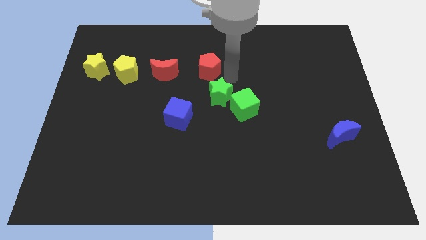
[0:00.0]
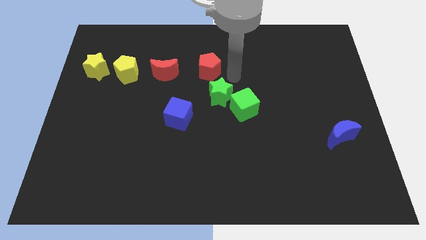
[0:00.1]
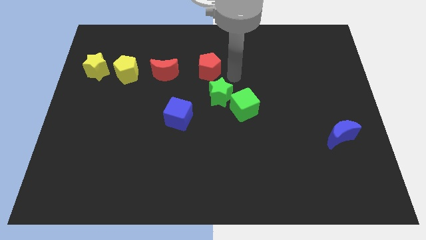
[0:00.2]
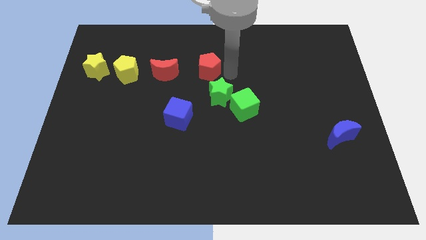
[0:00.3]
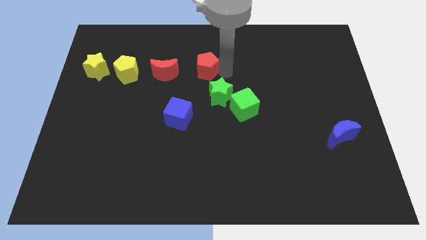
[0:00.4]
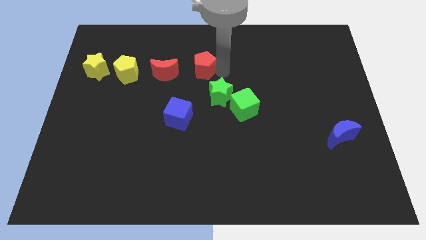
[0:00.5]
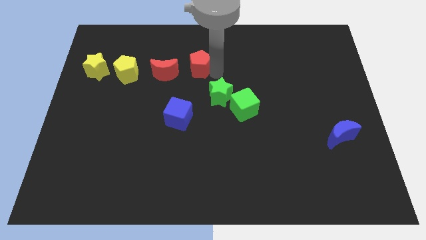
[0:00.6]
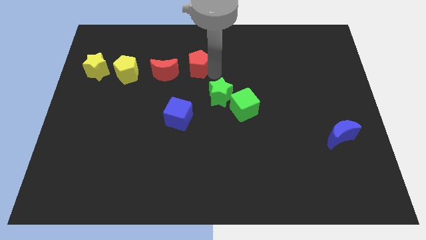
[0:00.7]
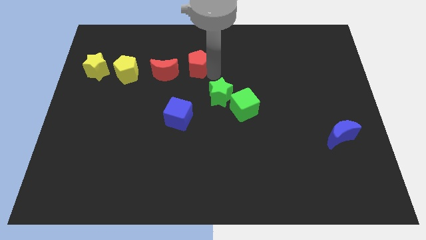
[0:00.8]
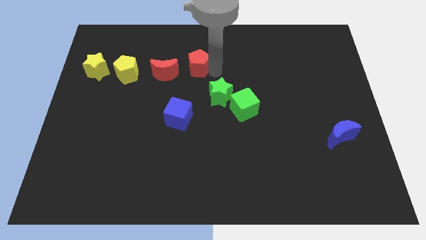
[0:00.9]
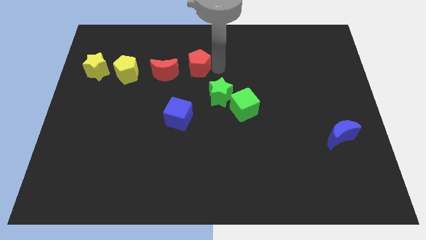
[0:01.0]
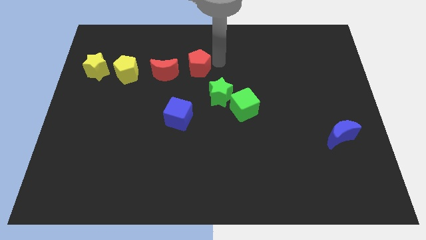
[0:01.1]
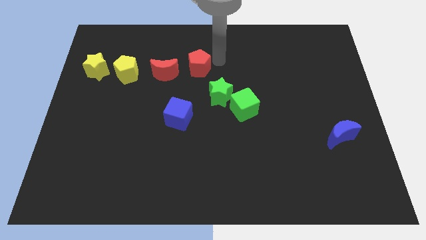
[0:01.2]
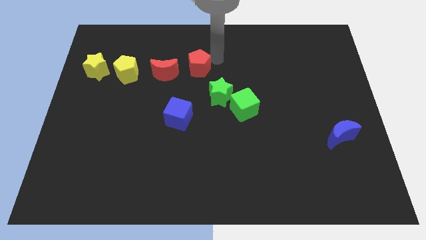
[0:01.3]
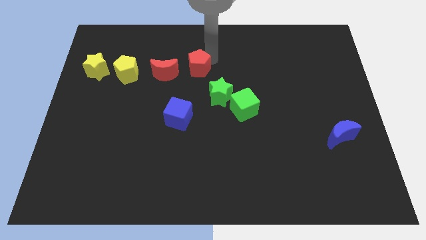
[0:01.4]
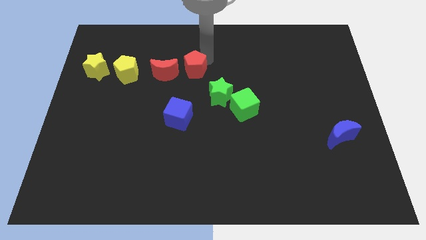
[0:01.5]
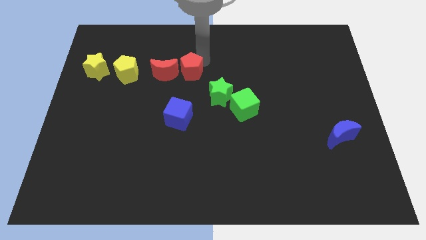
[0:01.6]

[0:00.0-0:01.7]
push the red pentagon to the right side of the red crescent

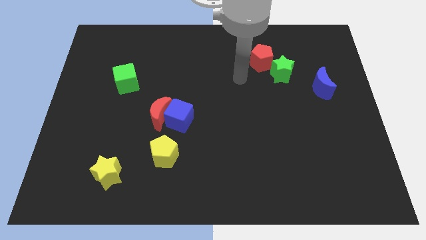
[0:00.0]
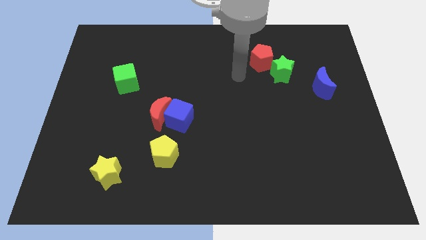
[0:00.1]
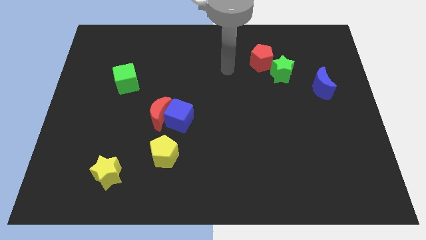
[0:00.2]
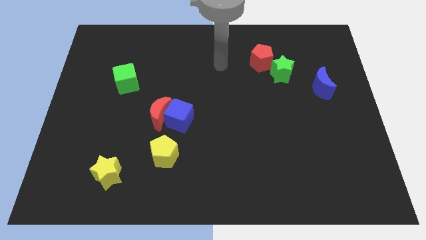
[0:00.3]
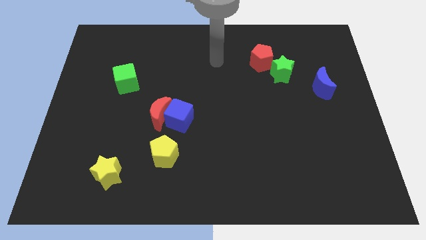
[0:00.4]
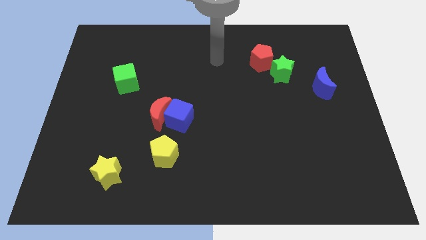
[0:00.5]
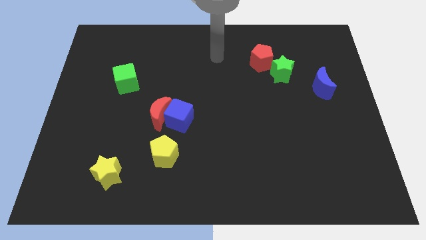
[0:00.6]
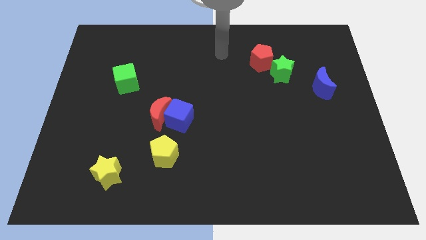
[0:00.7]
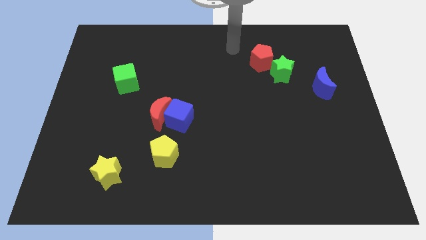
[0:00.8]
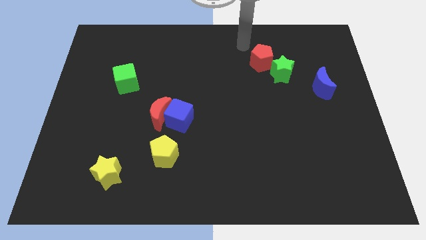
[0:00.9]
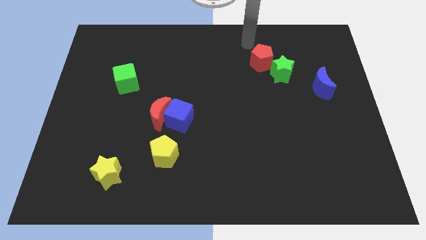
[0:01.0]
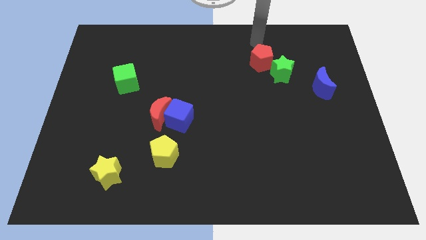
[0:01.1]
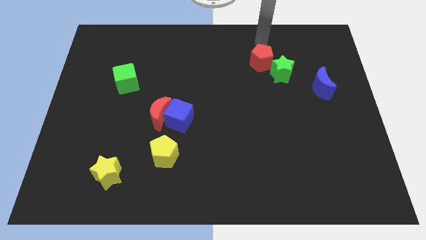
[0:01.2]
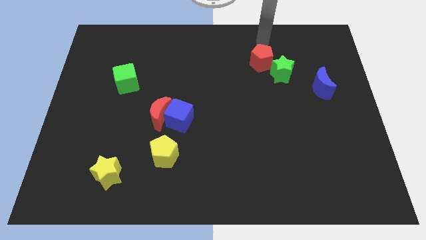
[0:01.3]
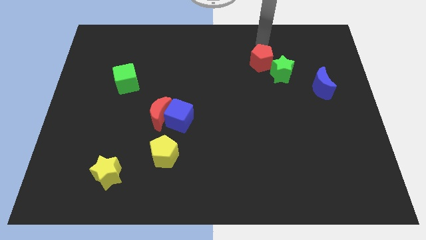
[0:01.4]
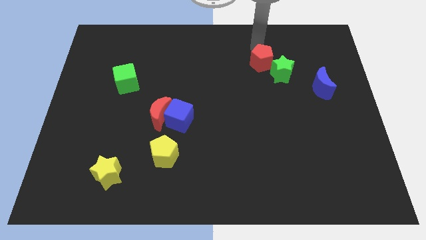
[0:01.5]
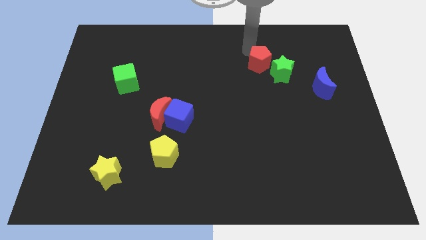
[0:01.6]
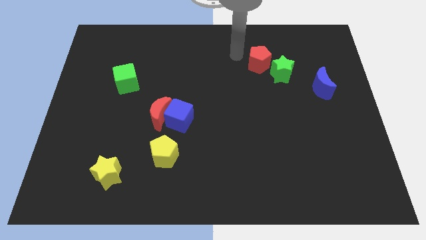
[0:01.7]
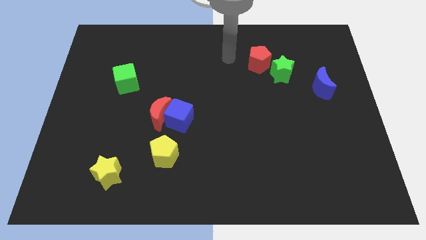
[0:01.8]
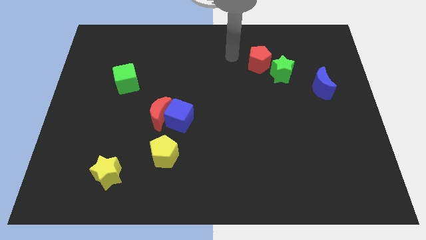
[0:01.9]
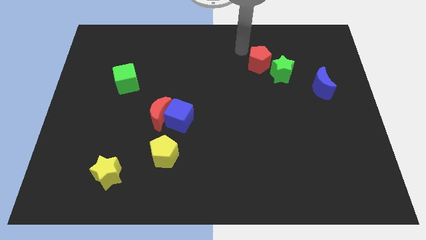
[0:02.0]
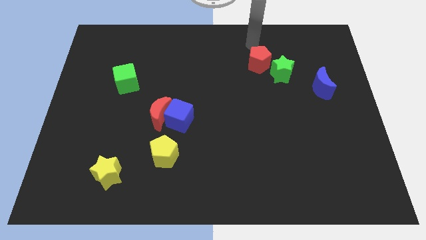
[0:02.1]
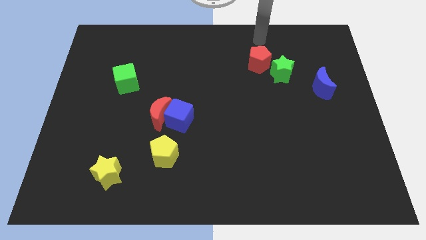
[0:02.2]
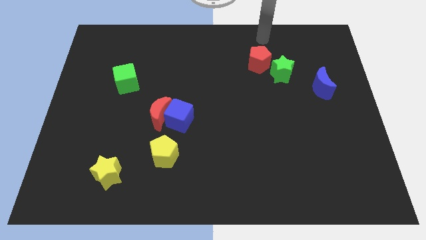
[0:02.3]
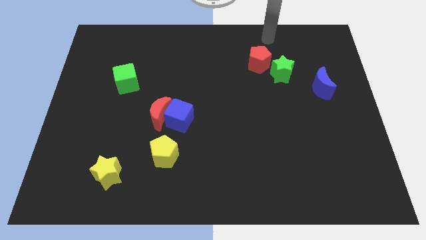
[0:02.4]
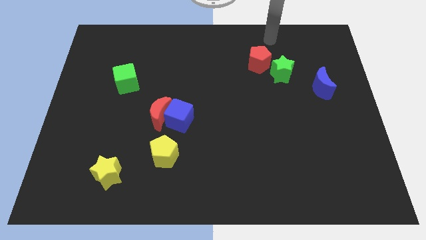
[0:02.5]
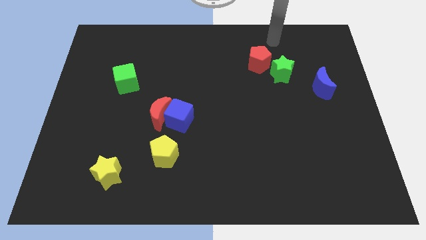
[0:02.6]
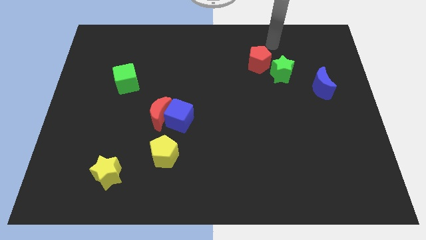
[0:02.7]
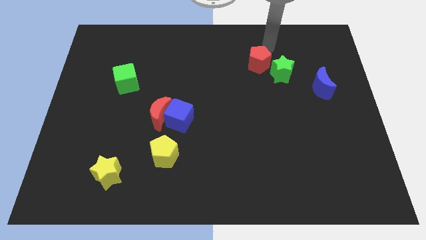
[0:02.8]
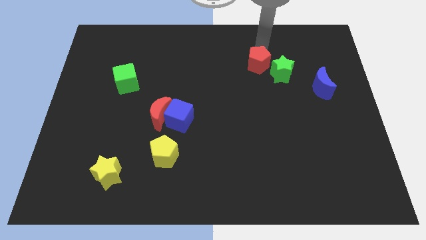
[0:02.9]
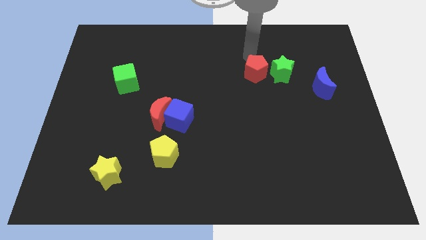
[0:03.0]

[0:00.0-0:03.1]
push the red pentagon to the left of the green star

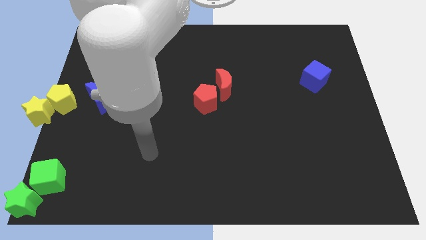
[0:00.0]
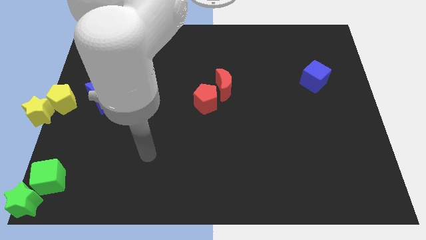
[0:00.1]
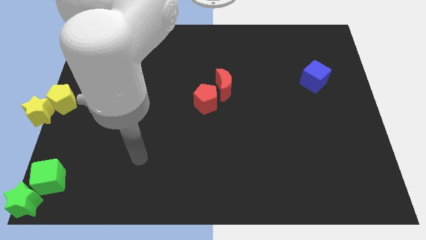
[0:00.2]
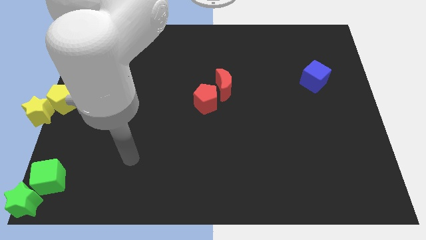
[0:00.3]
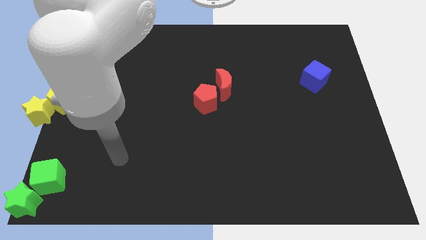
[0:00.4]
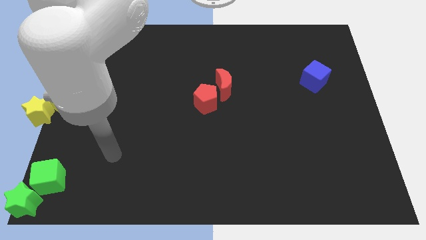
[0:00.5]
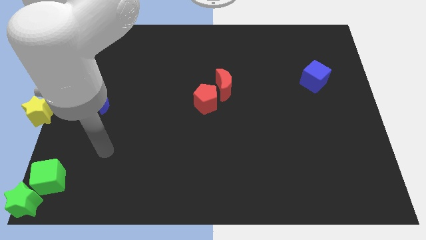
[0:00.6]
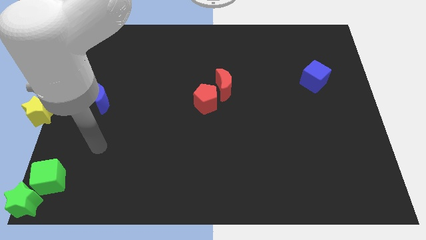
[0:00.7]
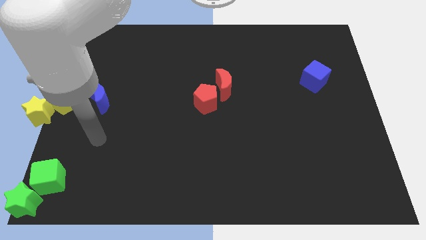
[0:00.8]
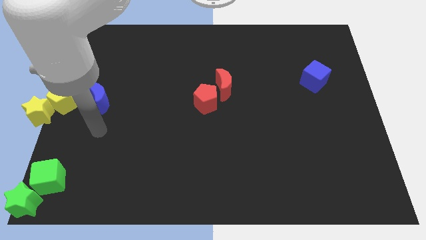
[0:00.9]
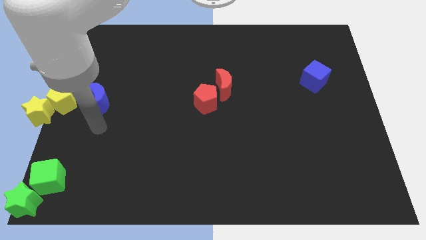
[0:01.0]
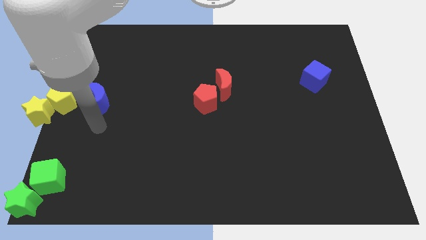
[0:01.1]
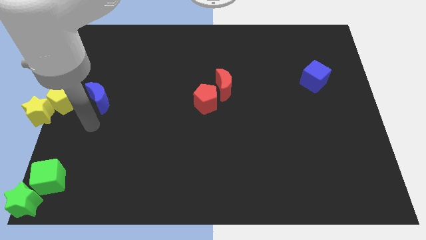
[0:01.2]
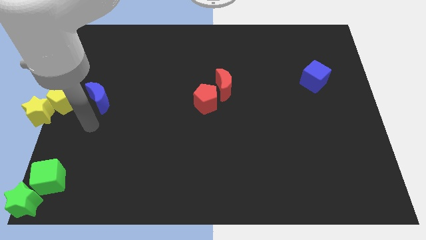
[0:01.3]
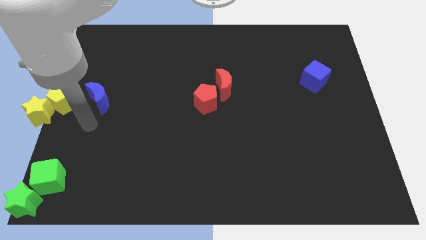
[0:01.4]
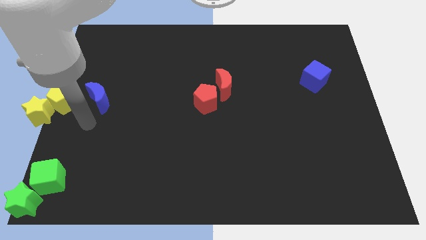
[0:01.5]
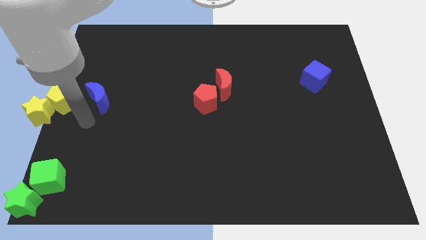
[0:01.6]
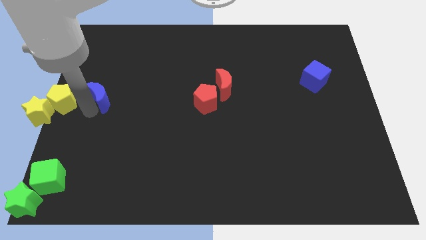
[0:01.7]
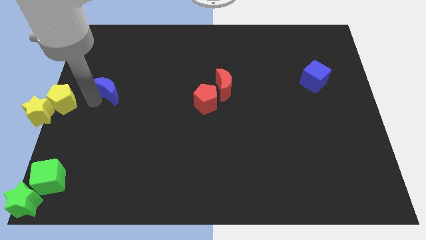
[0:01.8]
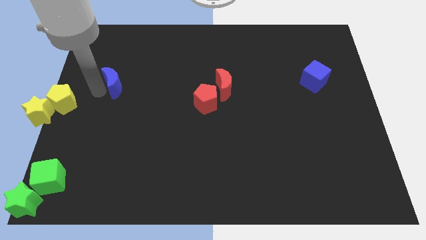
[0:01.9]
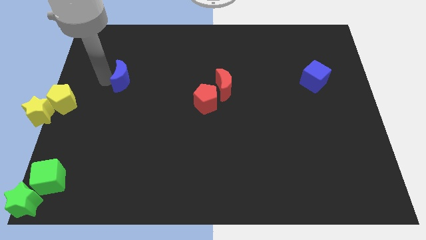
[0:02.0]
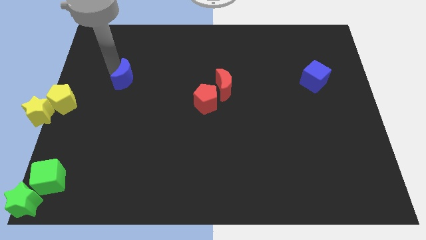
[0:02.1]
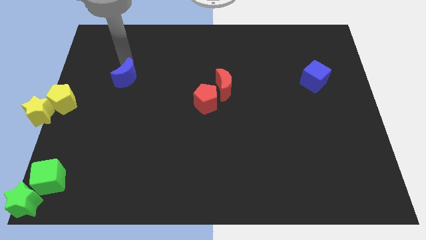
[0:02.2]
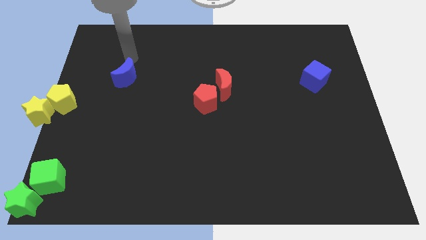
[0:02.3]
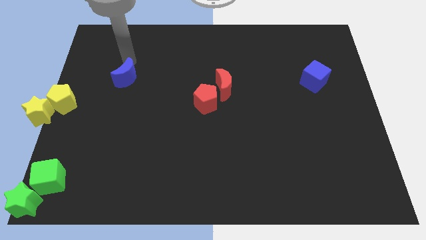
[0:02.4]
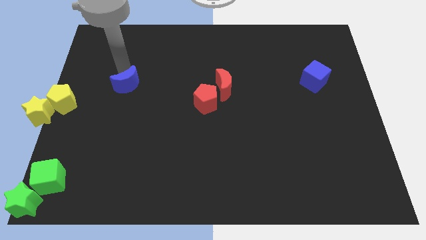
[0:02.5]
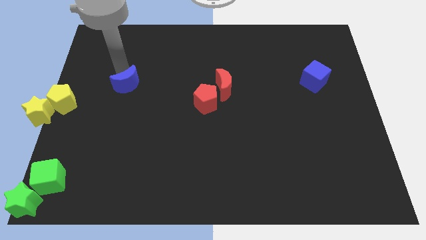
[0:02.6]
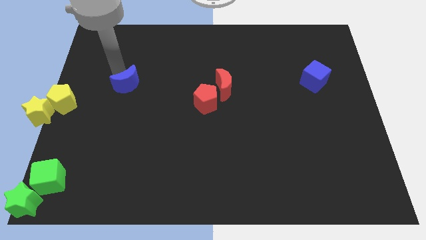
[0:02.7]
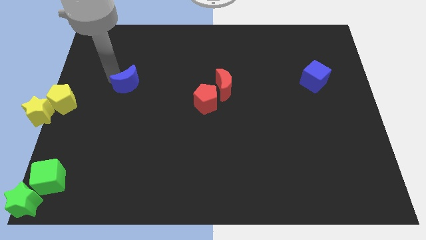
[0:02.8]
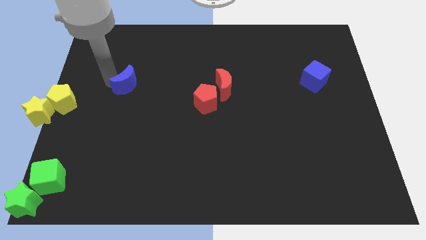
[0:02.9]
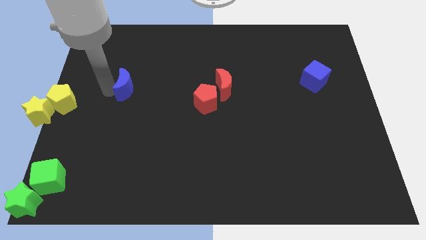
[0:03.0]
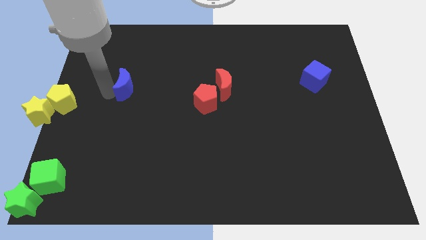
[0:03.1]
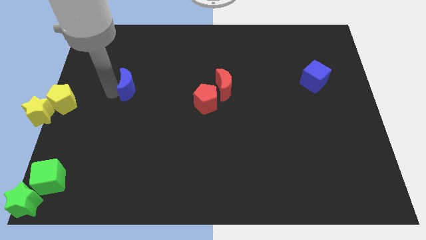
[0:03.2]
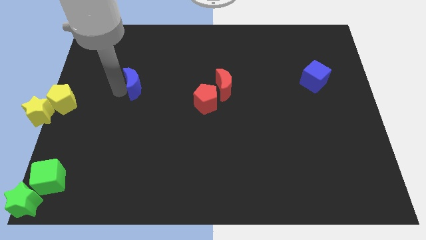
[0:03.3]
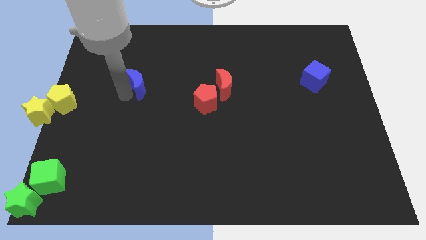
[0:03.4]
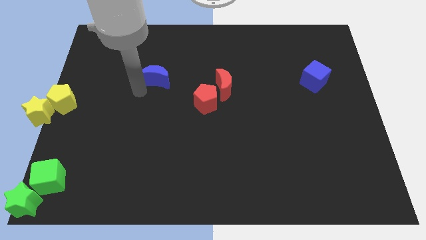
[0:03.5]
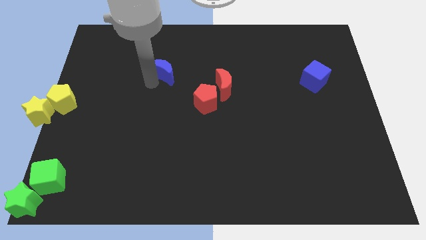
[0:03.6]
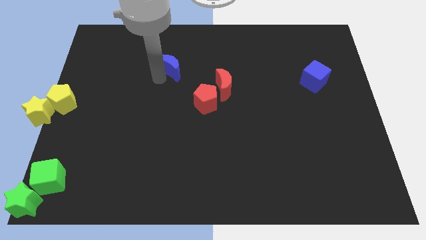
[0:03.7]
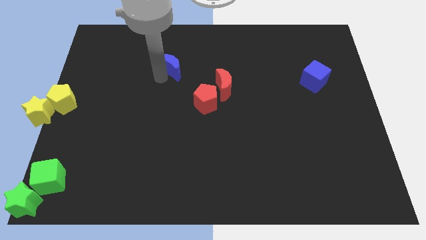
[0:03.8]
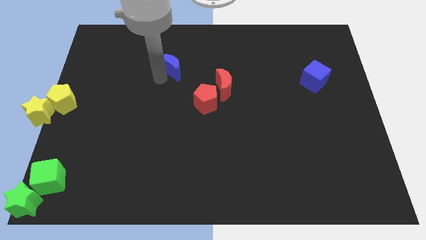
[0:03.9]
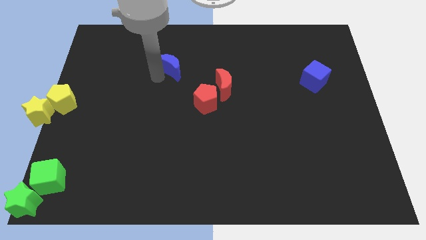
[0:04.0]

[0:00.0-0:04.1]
push the blue crescent diagonal top left to the the red pentagon
